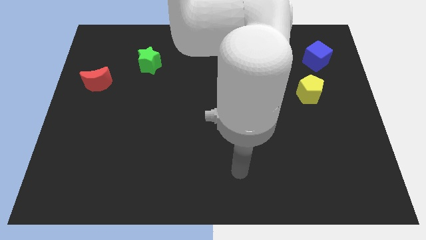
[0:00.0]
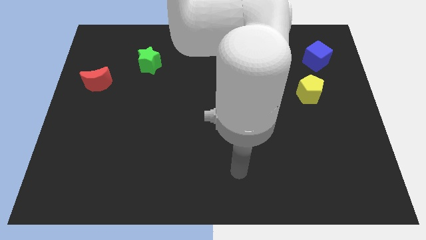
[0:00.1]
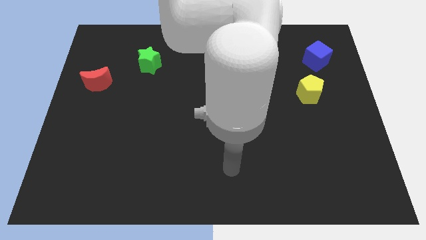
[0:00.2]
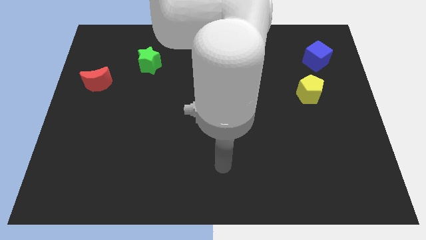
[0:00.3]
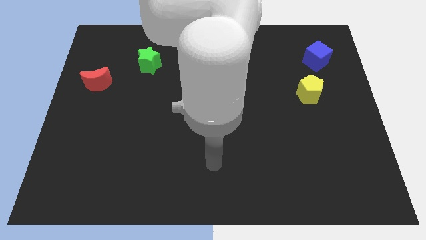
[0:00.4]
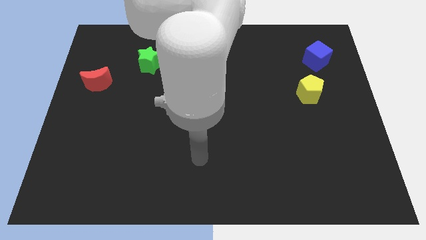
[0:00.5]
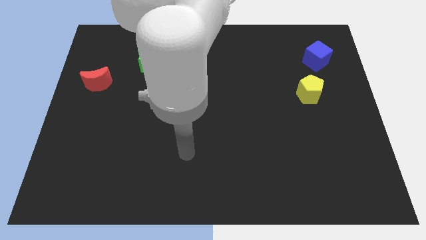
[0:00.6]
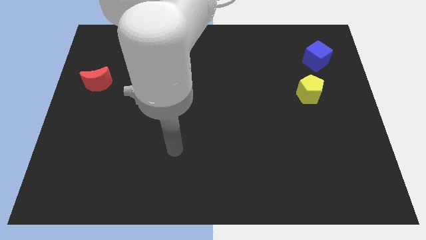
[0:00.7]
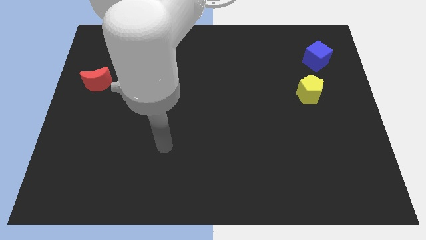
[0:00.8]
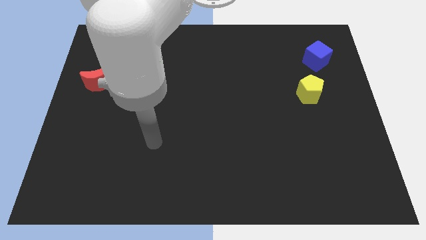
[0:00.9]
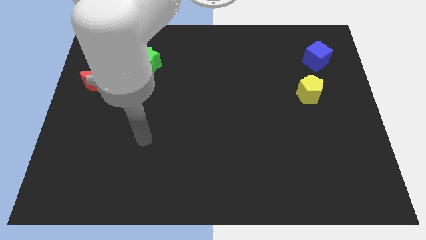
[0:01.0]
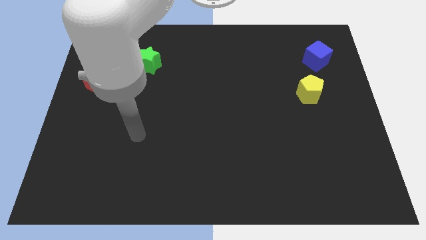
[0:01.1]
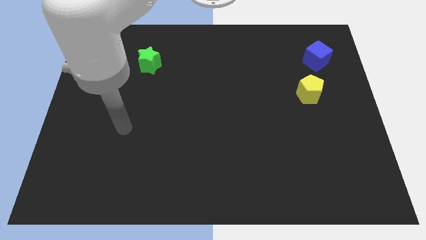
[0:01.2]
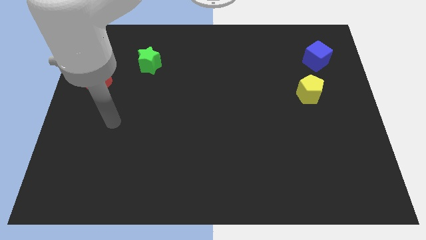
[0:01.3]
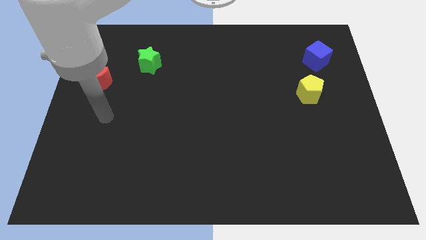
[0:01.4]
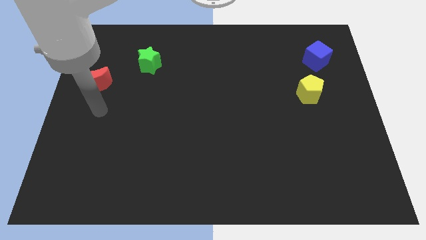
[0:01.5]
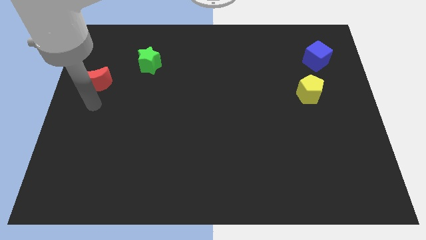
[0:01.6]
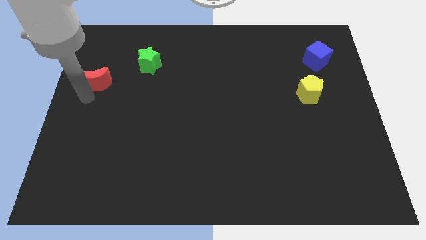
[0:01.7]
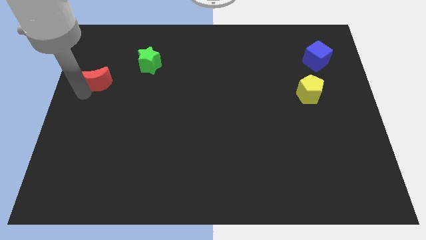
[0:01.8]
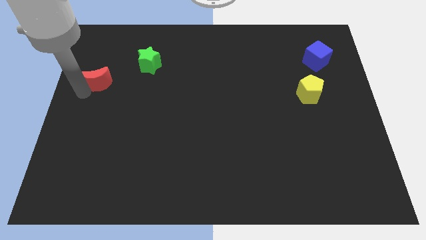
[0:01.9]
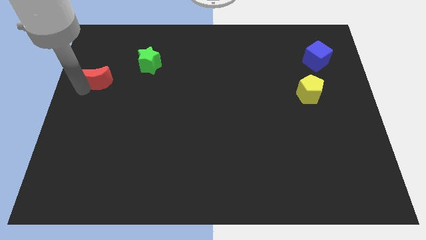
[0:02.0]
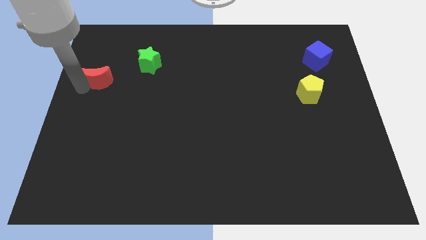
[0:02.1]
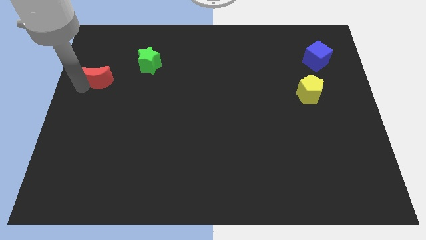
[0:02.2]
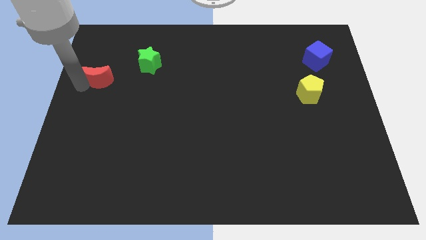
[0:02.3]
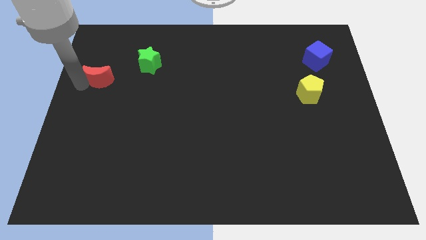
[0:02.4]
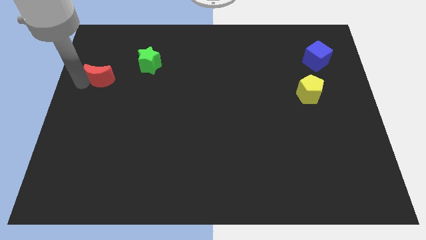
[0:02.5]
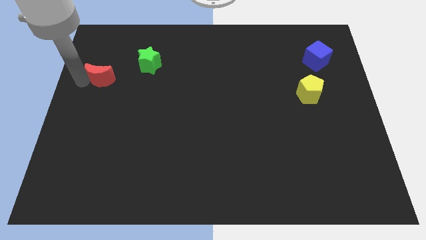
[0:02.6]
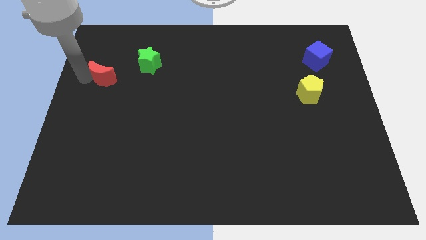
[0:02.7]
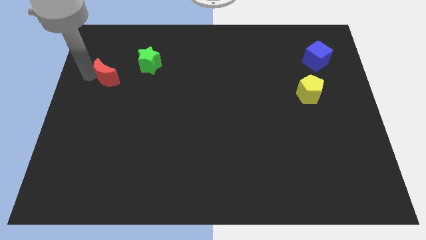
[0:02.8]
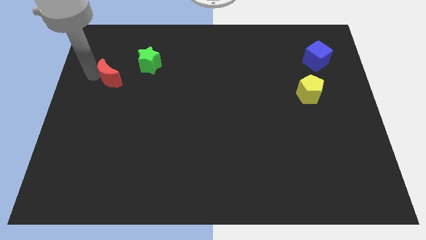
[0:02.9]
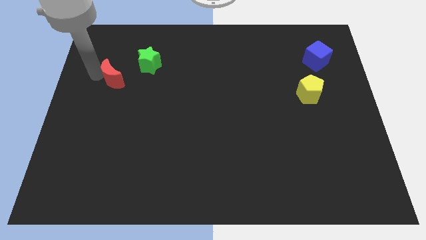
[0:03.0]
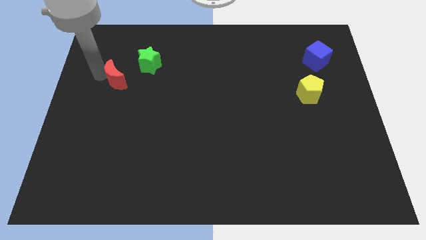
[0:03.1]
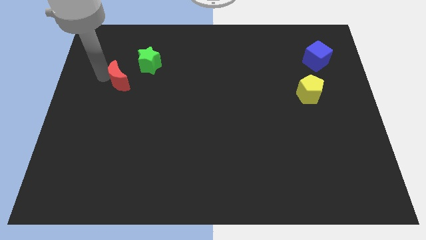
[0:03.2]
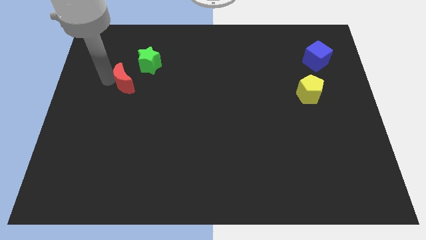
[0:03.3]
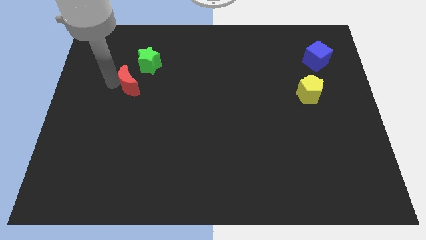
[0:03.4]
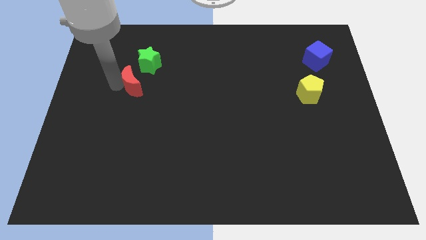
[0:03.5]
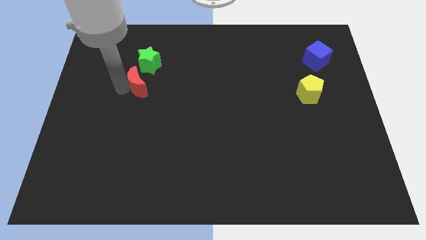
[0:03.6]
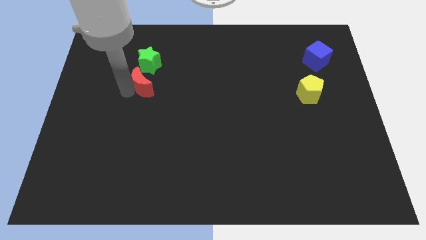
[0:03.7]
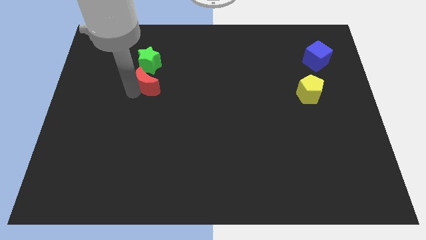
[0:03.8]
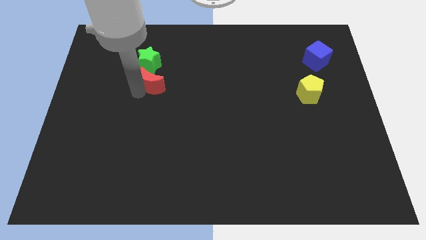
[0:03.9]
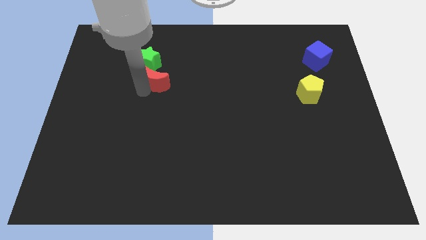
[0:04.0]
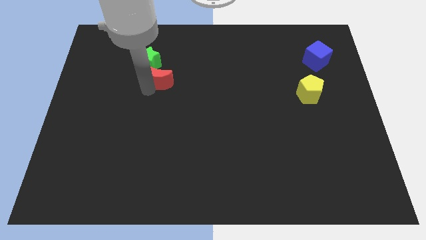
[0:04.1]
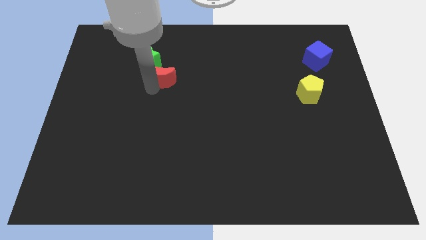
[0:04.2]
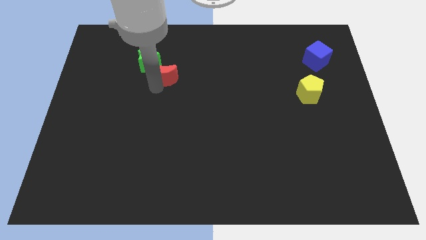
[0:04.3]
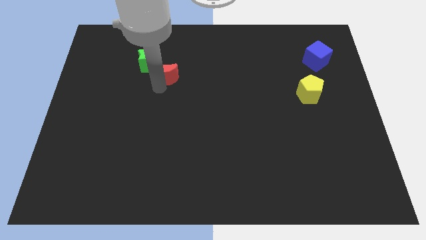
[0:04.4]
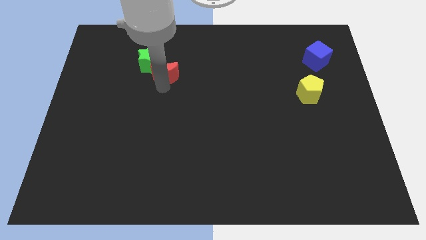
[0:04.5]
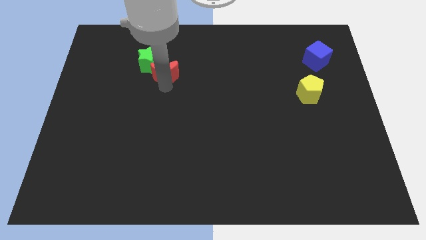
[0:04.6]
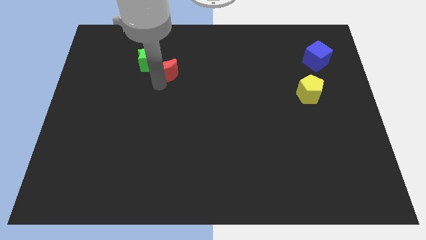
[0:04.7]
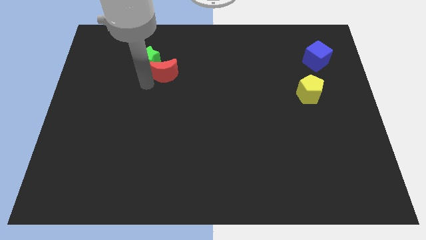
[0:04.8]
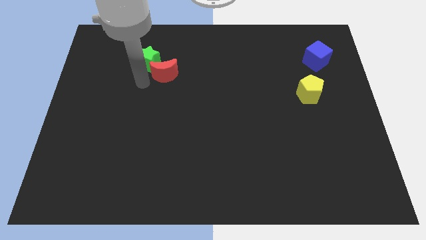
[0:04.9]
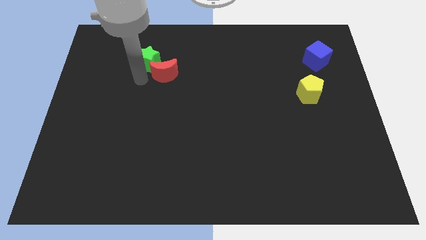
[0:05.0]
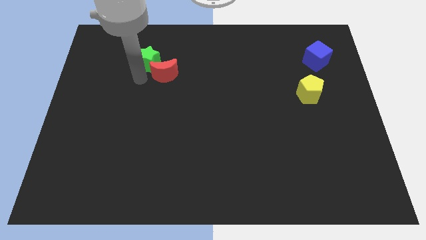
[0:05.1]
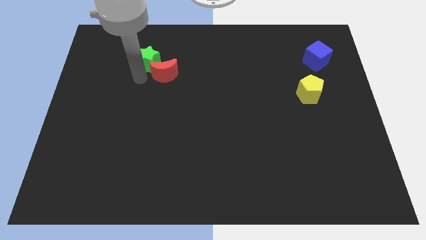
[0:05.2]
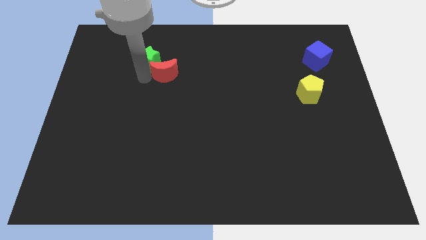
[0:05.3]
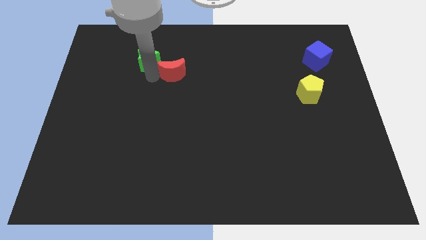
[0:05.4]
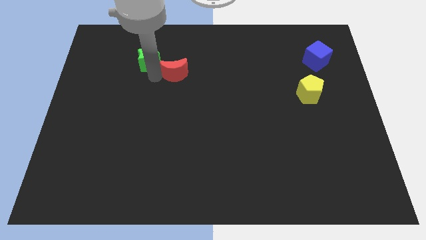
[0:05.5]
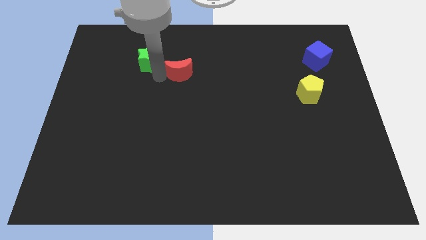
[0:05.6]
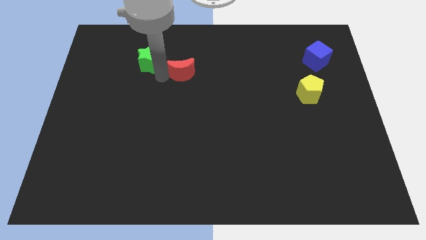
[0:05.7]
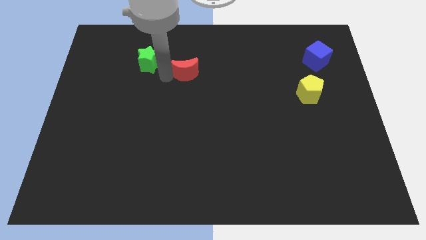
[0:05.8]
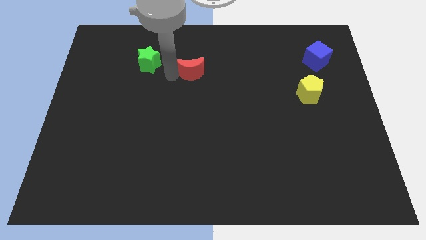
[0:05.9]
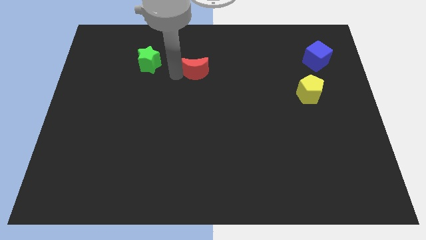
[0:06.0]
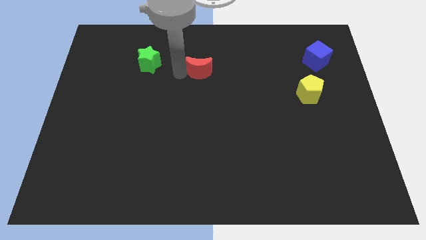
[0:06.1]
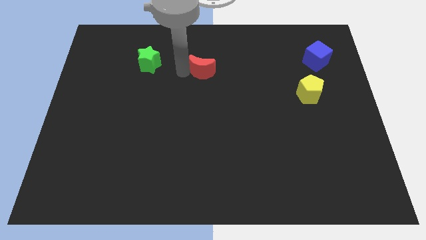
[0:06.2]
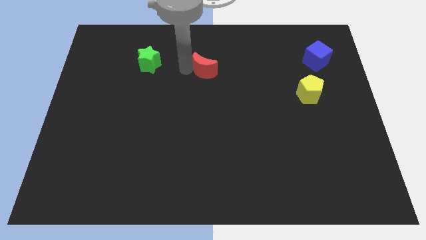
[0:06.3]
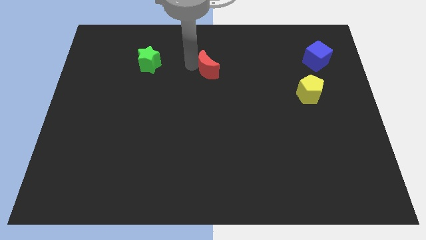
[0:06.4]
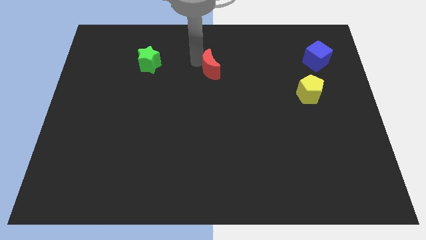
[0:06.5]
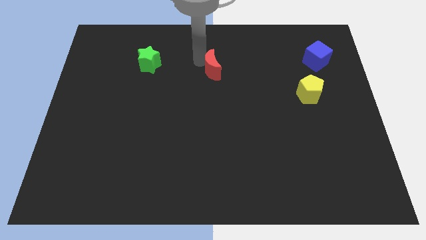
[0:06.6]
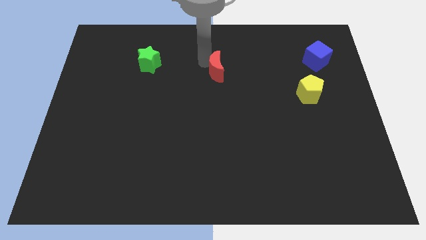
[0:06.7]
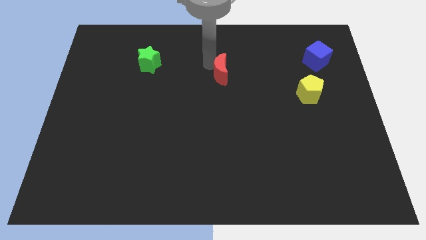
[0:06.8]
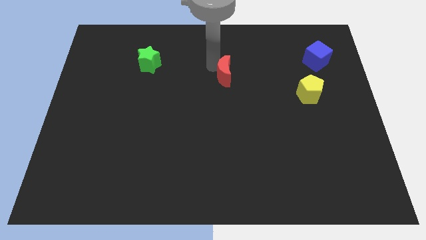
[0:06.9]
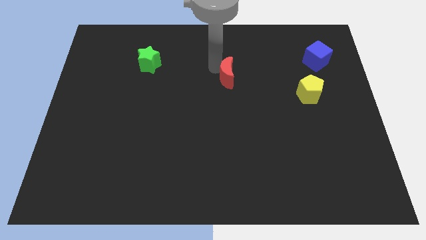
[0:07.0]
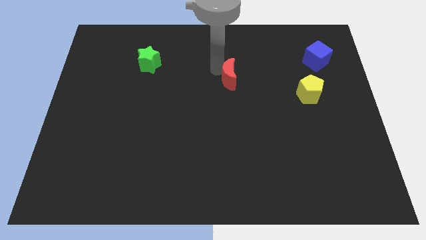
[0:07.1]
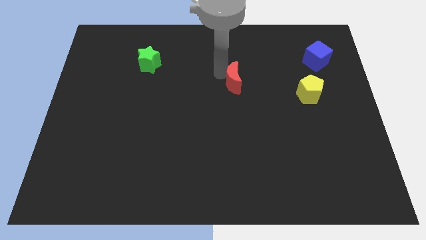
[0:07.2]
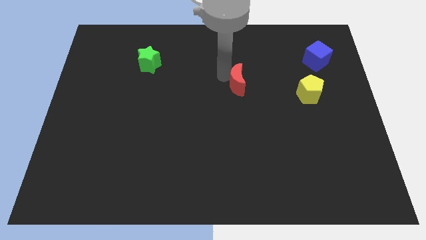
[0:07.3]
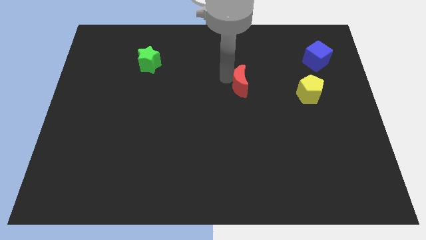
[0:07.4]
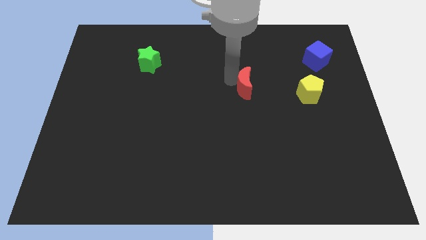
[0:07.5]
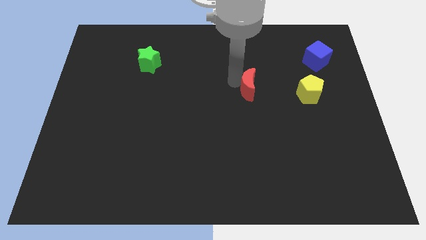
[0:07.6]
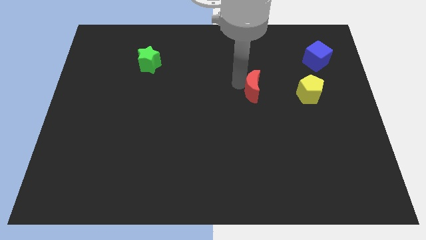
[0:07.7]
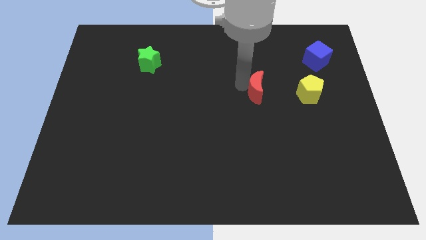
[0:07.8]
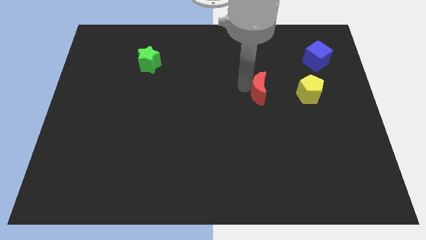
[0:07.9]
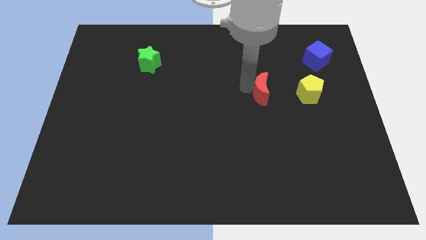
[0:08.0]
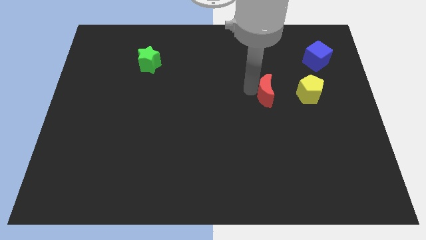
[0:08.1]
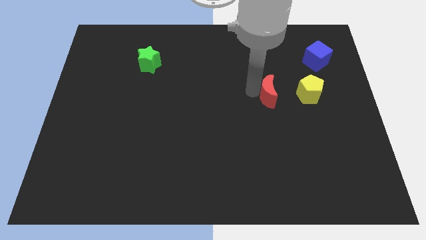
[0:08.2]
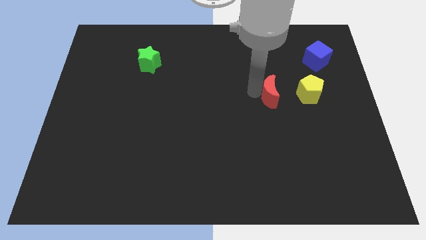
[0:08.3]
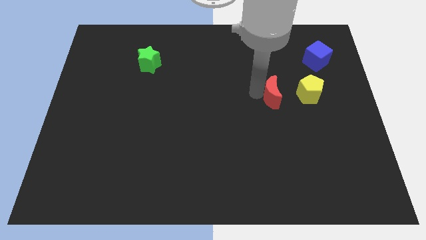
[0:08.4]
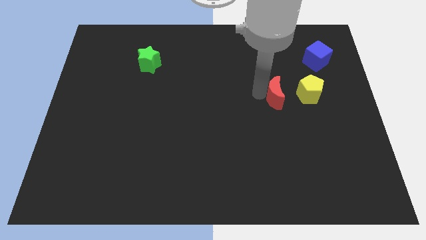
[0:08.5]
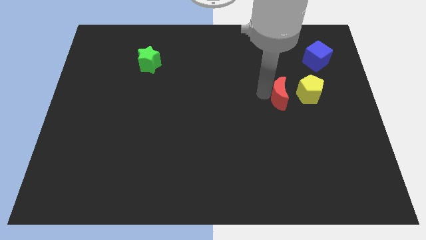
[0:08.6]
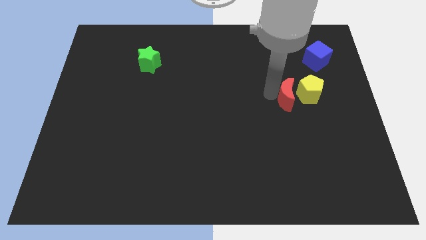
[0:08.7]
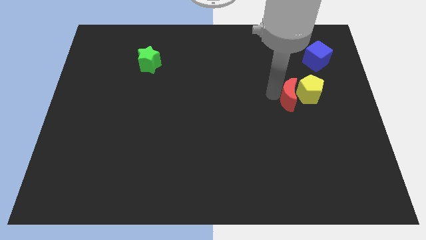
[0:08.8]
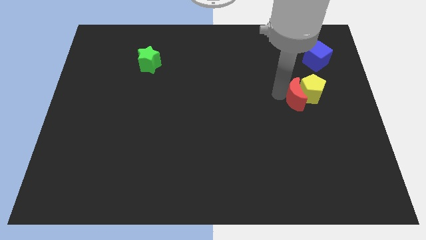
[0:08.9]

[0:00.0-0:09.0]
put the moon to the yellow pentagon
